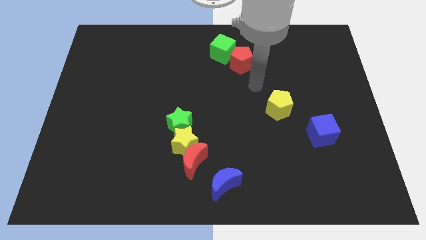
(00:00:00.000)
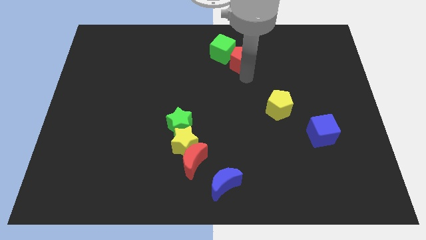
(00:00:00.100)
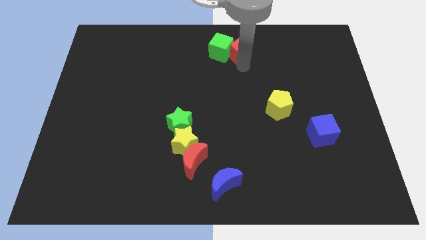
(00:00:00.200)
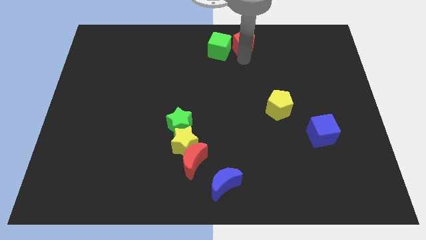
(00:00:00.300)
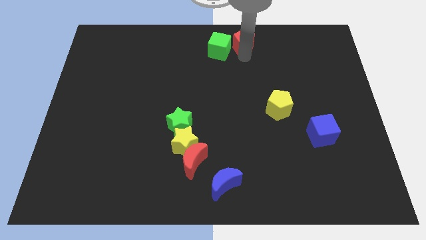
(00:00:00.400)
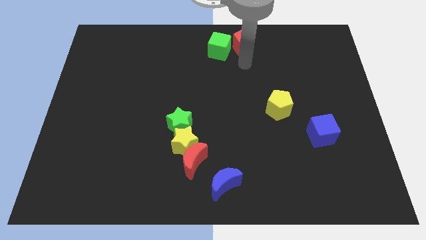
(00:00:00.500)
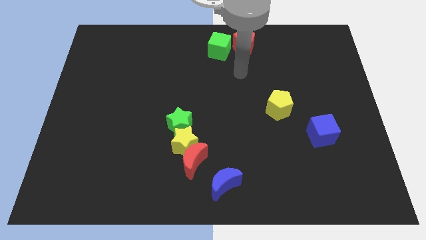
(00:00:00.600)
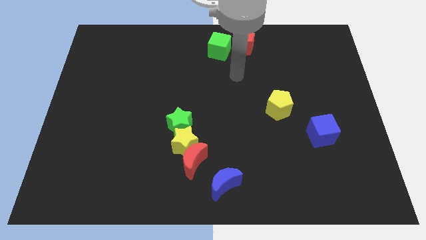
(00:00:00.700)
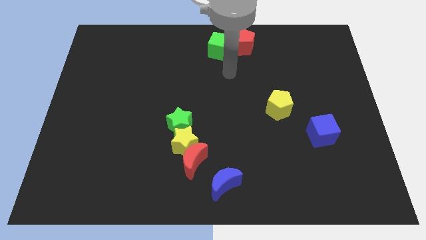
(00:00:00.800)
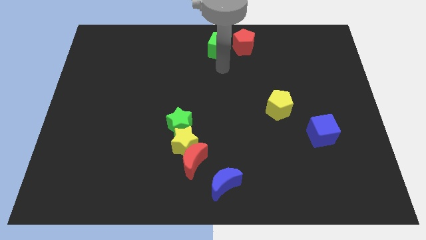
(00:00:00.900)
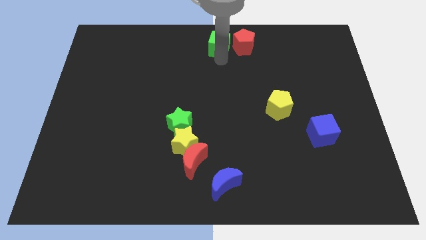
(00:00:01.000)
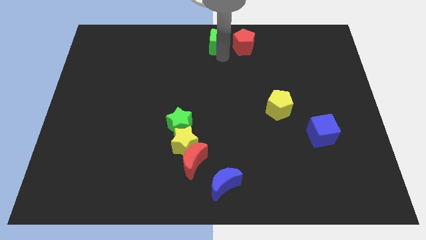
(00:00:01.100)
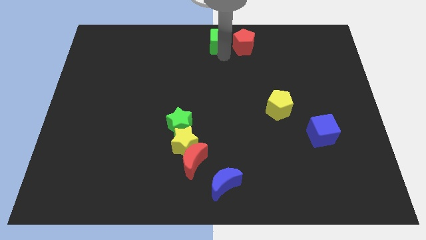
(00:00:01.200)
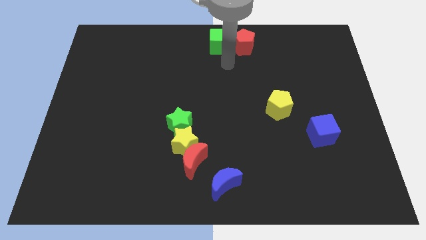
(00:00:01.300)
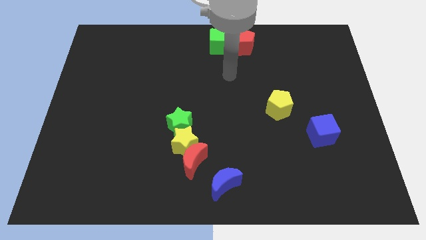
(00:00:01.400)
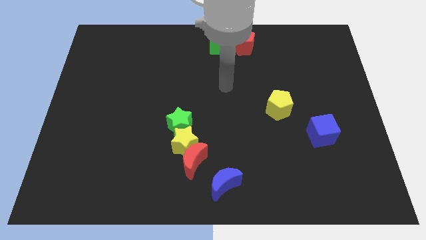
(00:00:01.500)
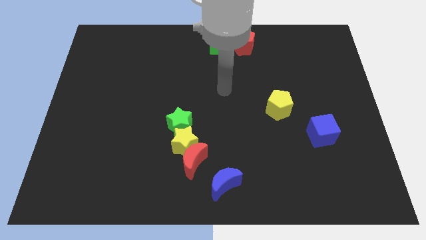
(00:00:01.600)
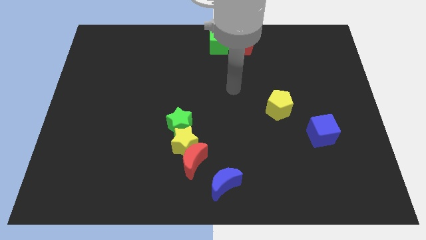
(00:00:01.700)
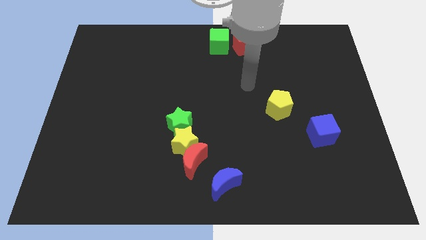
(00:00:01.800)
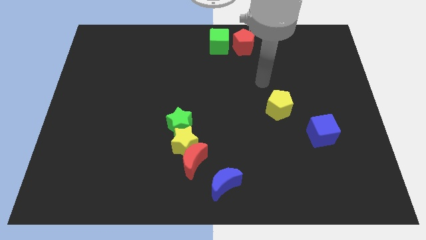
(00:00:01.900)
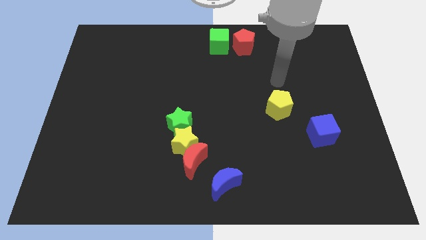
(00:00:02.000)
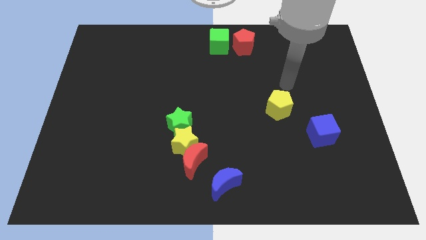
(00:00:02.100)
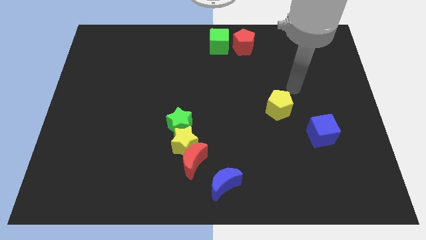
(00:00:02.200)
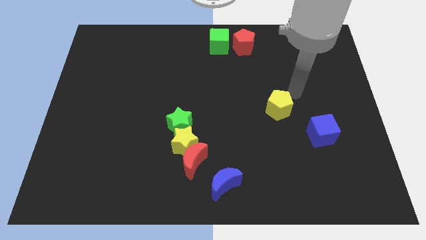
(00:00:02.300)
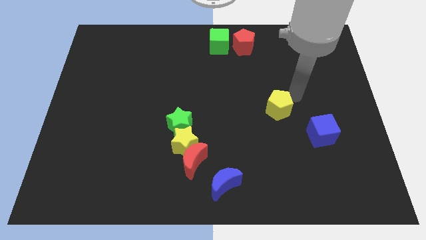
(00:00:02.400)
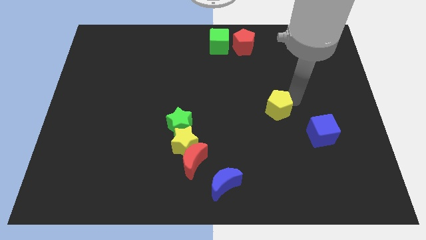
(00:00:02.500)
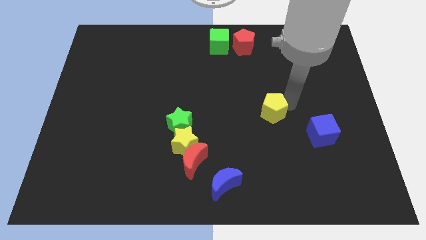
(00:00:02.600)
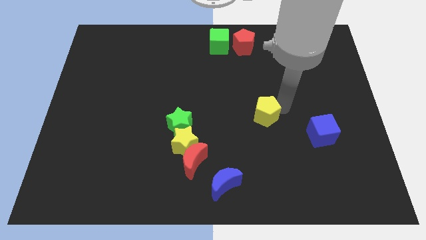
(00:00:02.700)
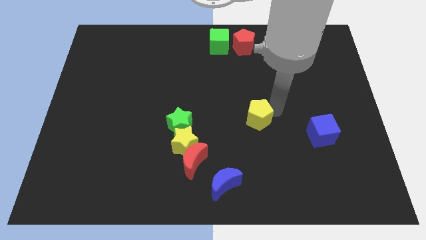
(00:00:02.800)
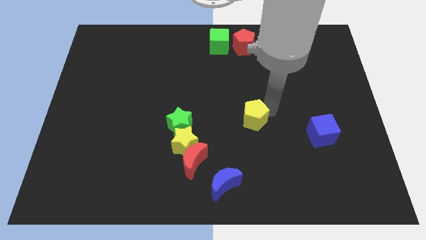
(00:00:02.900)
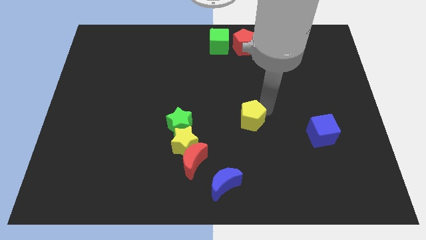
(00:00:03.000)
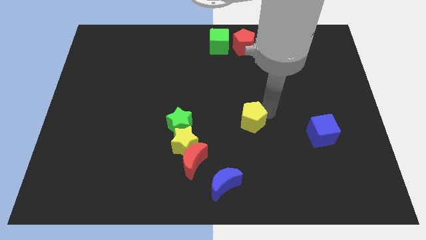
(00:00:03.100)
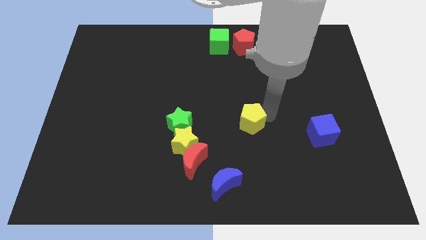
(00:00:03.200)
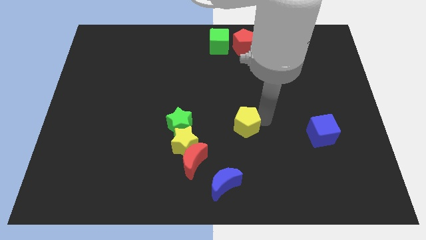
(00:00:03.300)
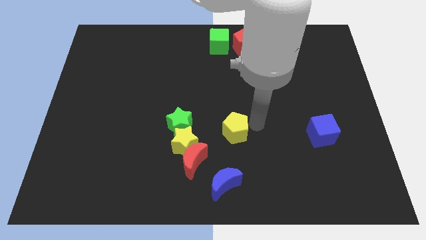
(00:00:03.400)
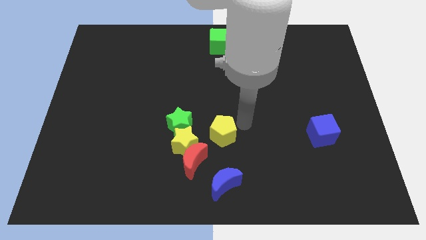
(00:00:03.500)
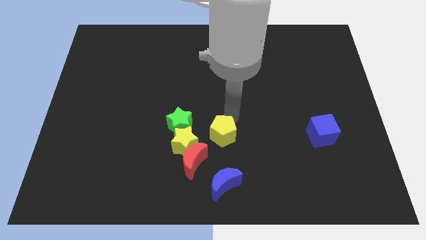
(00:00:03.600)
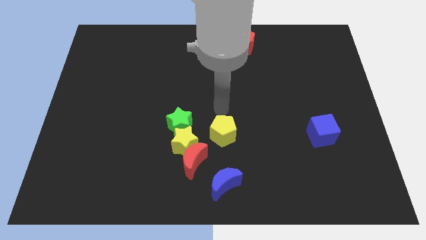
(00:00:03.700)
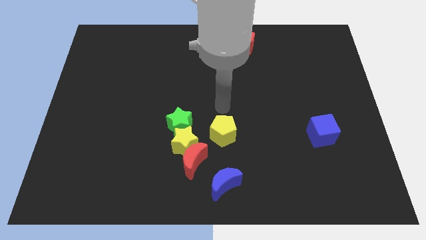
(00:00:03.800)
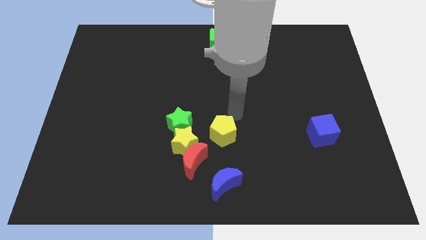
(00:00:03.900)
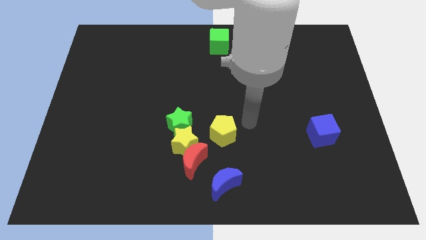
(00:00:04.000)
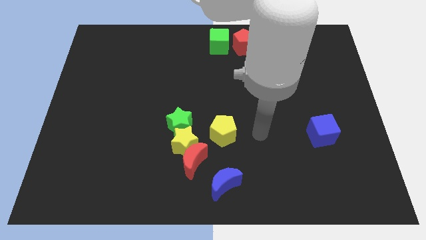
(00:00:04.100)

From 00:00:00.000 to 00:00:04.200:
move the yellow pentagon to the right of yellow star

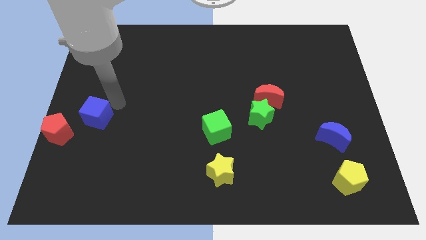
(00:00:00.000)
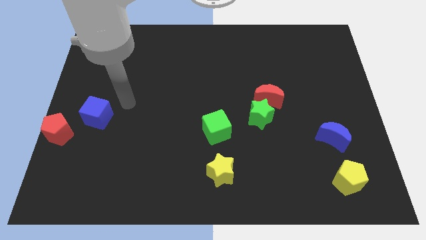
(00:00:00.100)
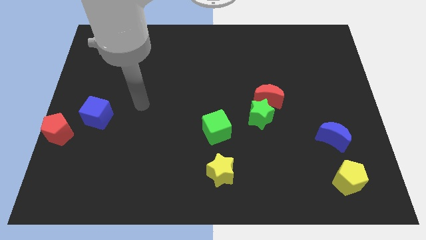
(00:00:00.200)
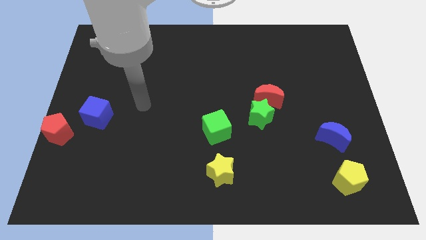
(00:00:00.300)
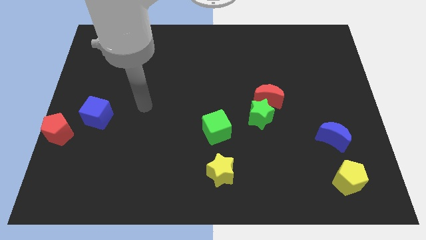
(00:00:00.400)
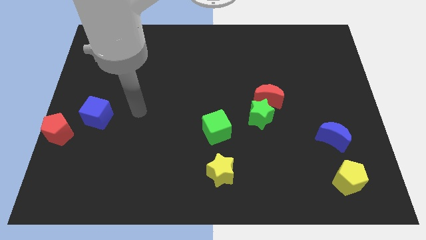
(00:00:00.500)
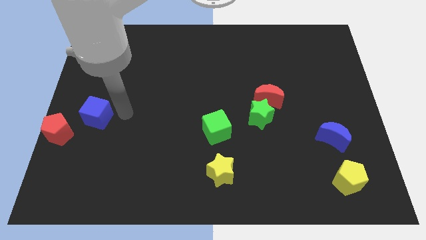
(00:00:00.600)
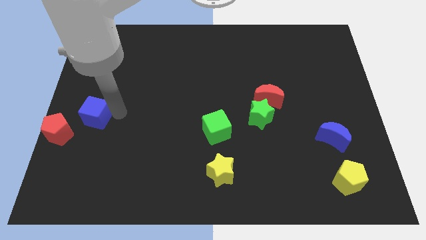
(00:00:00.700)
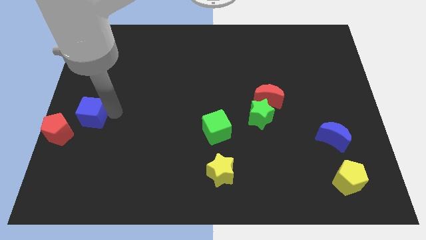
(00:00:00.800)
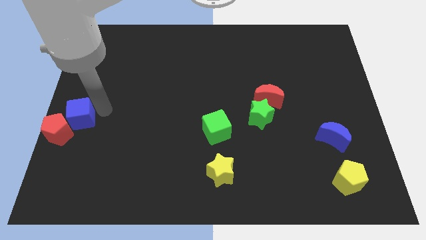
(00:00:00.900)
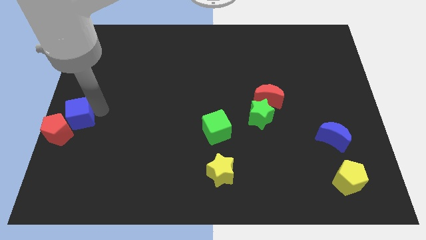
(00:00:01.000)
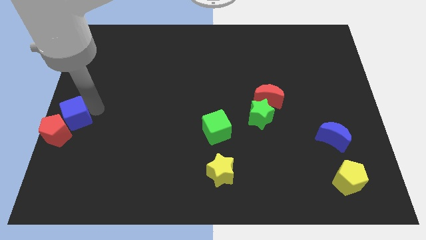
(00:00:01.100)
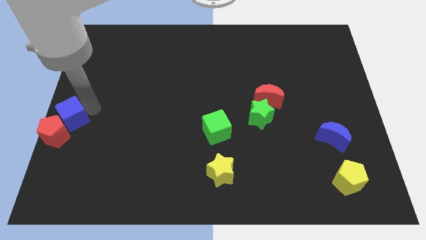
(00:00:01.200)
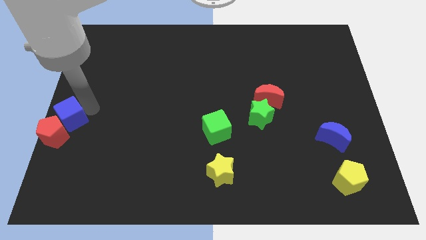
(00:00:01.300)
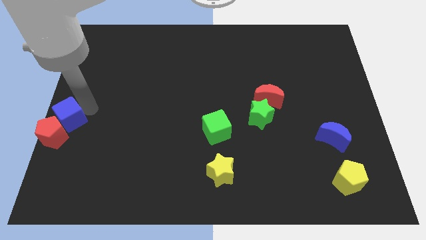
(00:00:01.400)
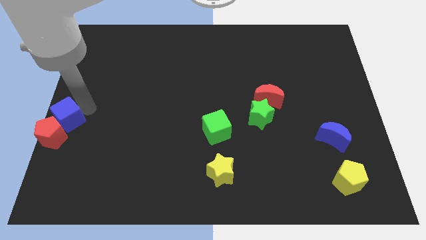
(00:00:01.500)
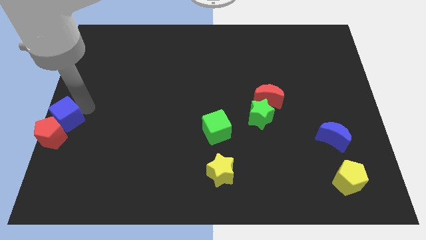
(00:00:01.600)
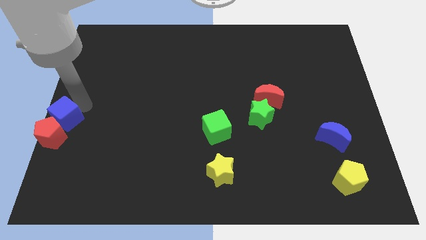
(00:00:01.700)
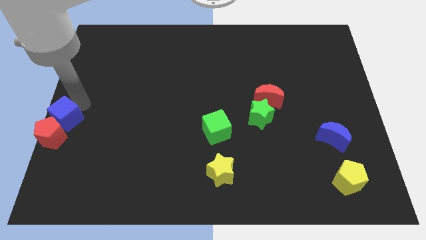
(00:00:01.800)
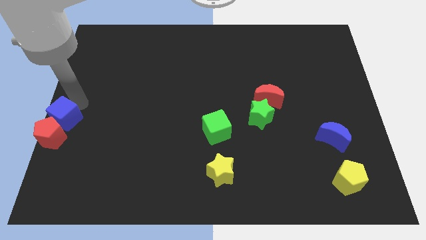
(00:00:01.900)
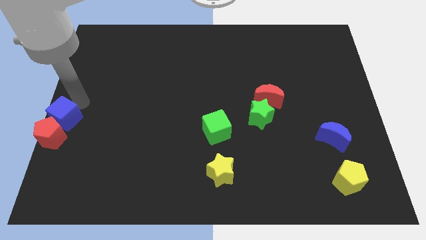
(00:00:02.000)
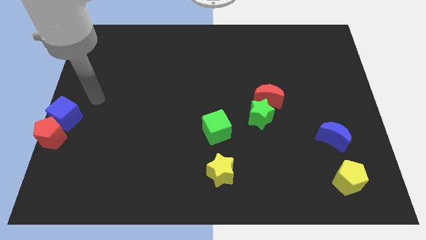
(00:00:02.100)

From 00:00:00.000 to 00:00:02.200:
place the blue cube on top of the red pentagon

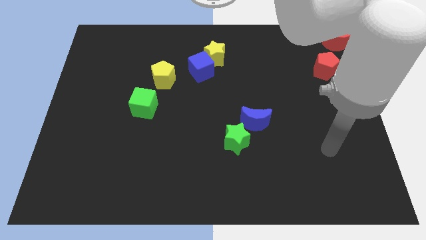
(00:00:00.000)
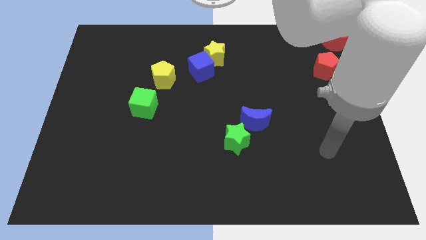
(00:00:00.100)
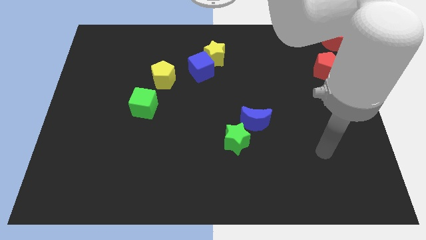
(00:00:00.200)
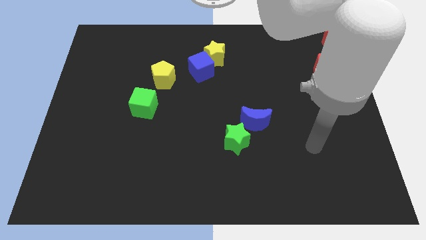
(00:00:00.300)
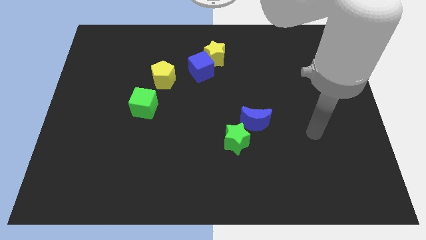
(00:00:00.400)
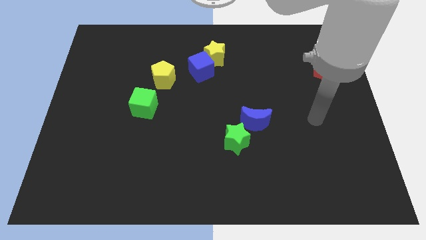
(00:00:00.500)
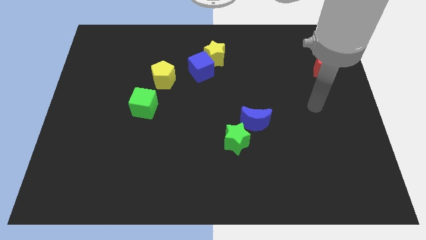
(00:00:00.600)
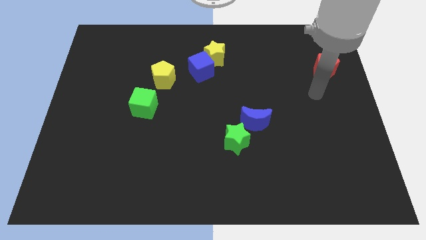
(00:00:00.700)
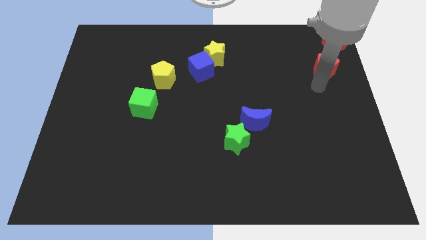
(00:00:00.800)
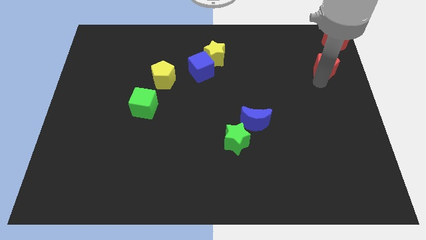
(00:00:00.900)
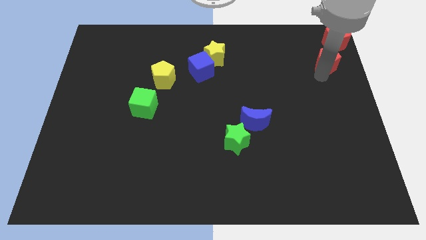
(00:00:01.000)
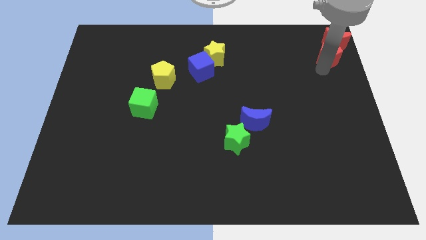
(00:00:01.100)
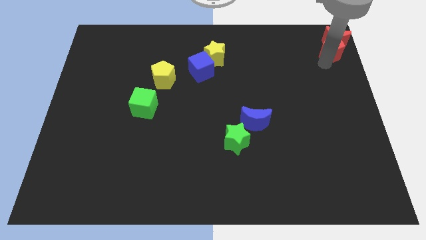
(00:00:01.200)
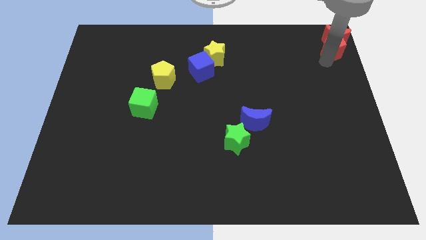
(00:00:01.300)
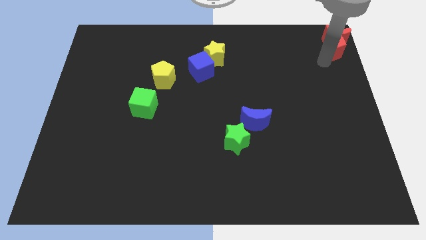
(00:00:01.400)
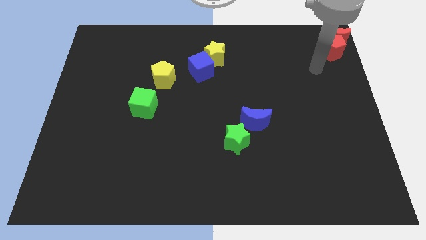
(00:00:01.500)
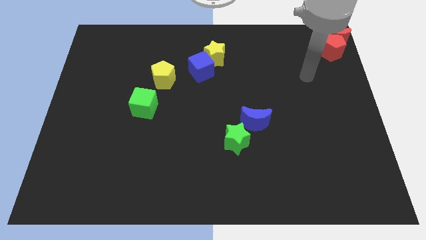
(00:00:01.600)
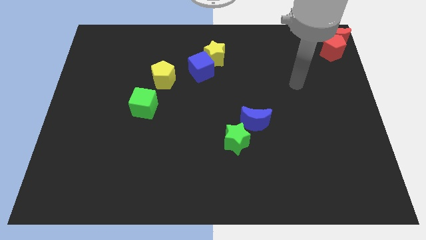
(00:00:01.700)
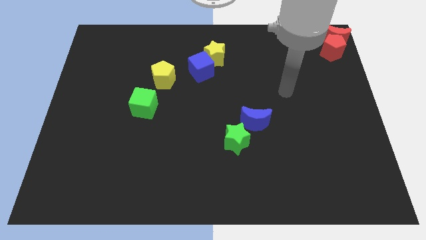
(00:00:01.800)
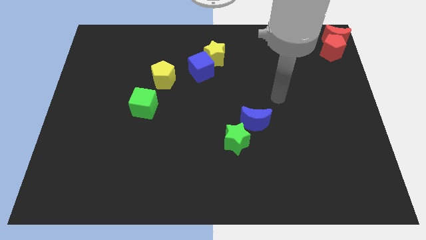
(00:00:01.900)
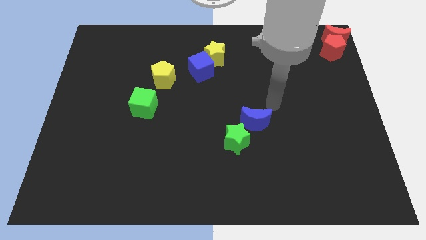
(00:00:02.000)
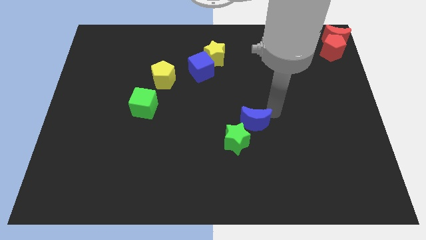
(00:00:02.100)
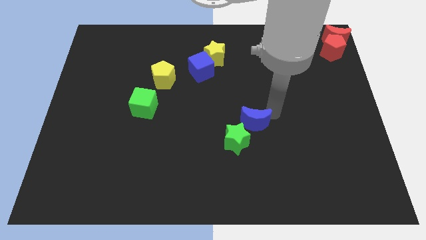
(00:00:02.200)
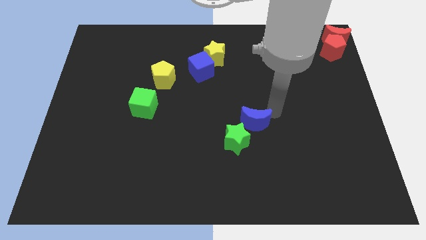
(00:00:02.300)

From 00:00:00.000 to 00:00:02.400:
move the red pentagon to the bottom of the red crescent
